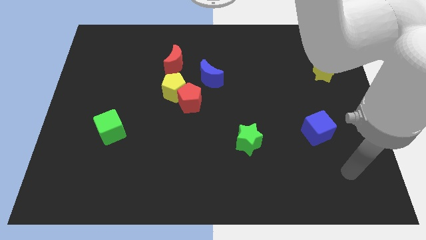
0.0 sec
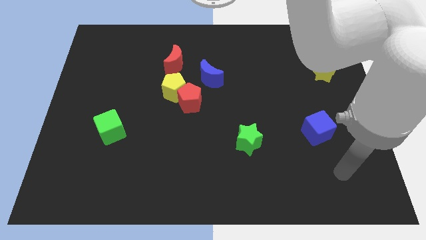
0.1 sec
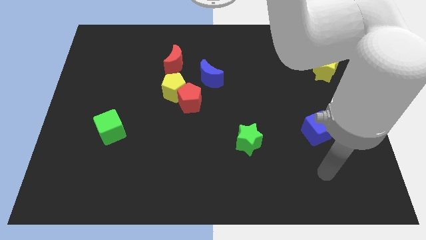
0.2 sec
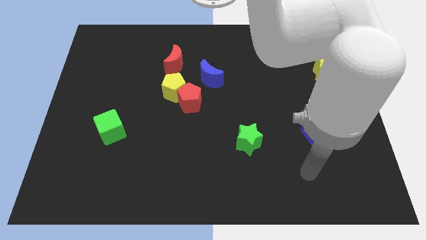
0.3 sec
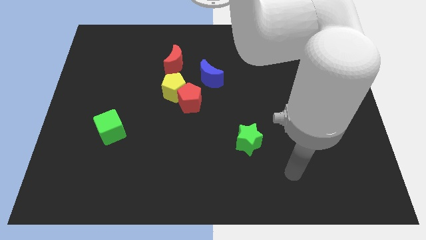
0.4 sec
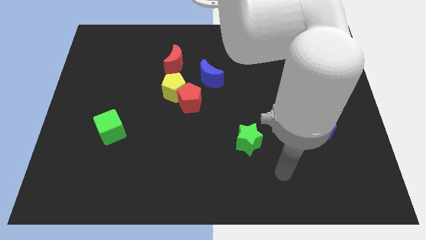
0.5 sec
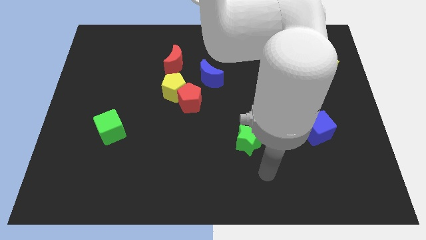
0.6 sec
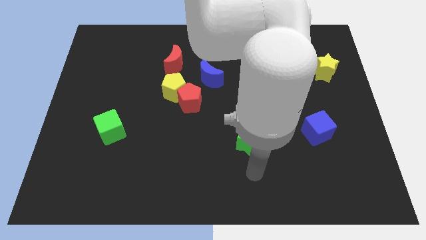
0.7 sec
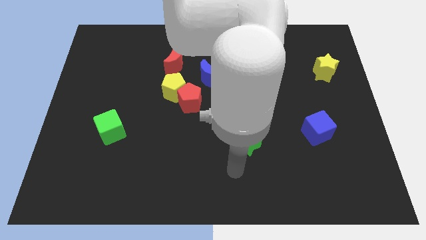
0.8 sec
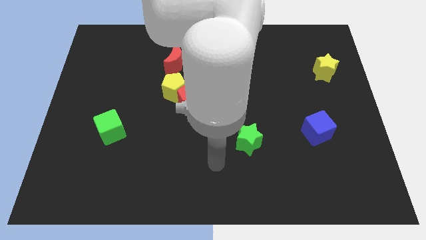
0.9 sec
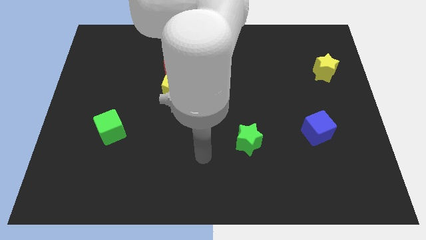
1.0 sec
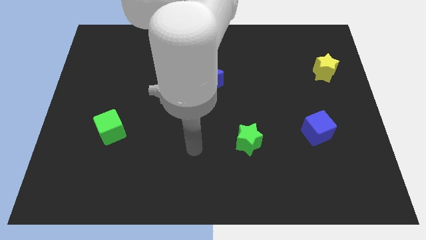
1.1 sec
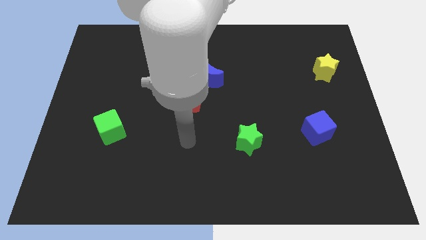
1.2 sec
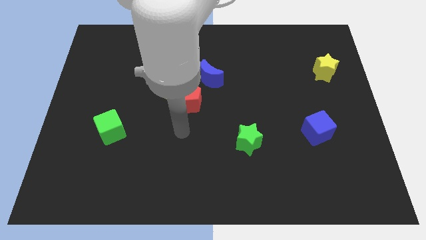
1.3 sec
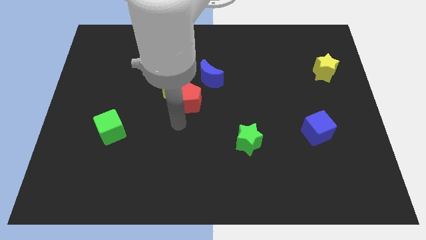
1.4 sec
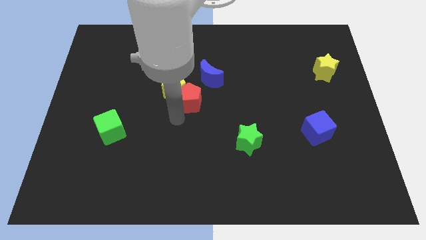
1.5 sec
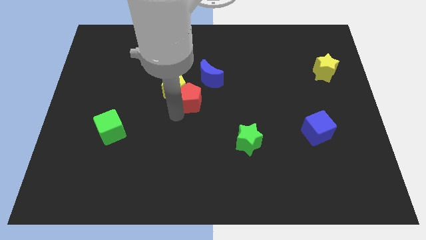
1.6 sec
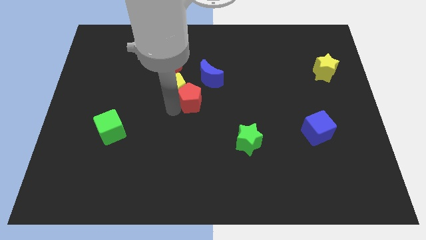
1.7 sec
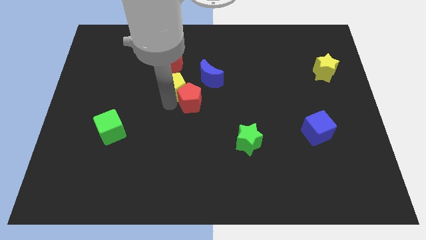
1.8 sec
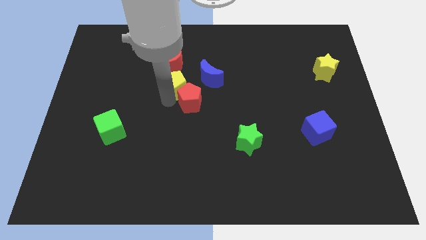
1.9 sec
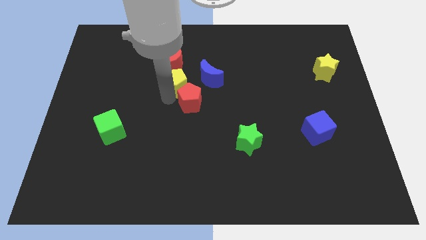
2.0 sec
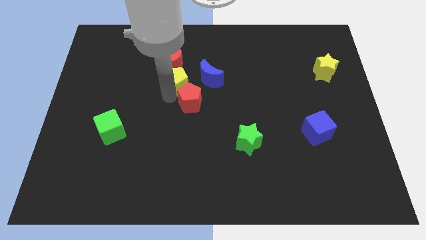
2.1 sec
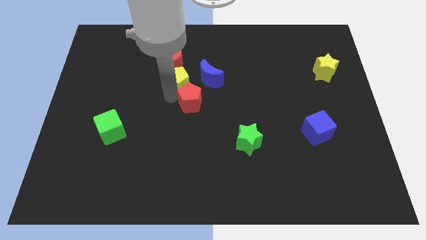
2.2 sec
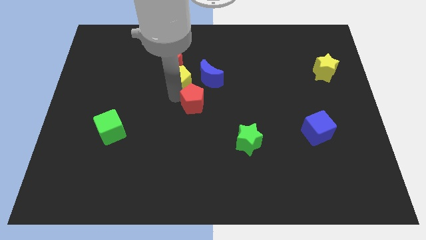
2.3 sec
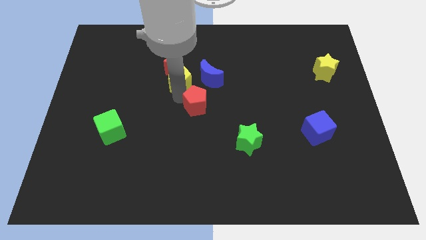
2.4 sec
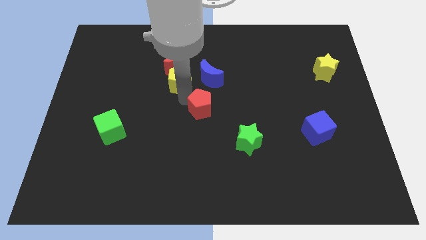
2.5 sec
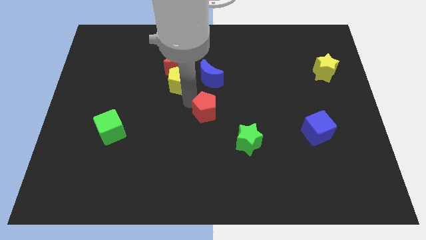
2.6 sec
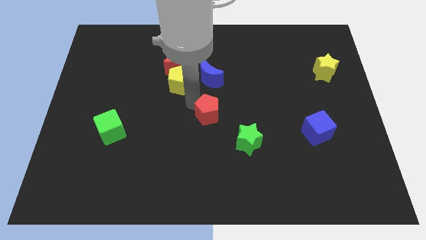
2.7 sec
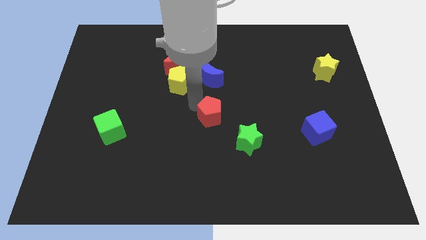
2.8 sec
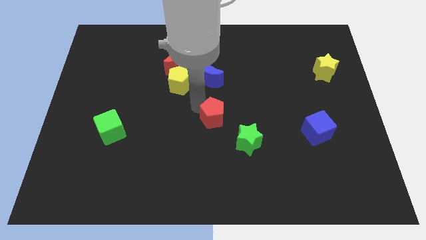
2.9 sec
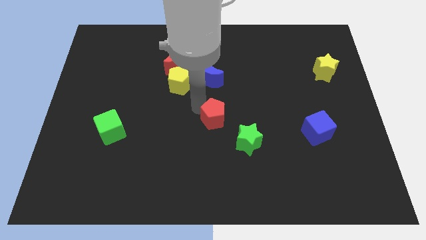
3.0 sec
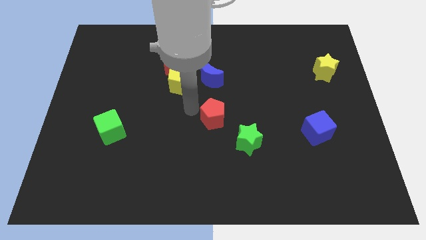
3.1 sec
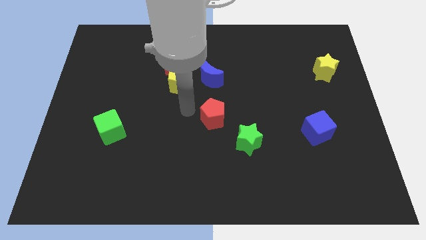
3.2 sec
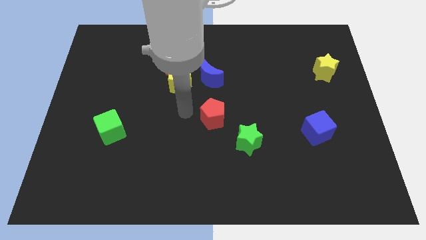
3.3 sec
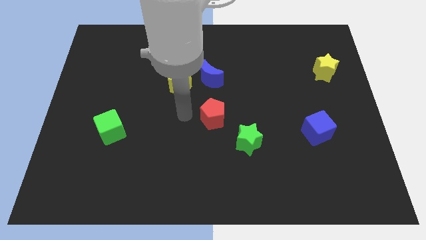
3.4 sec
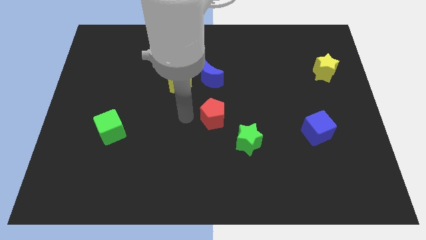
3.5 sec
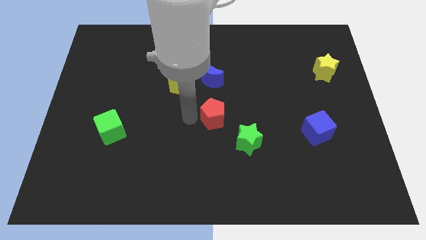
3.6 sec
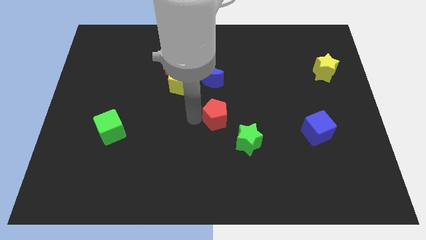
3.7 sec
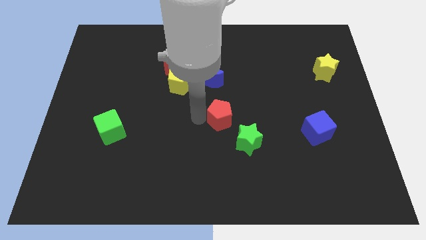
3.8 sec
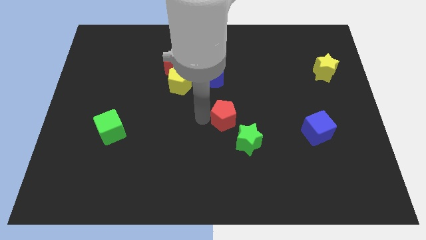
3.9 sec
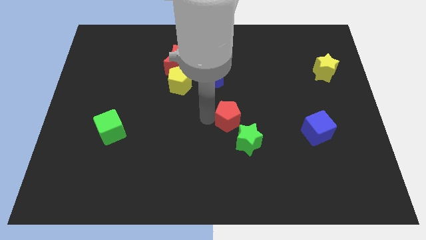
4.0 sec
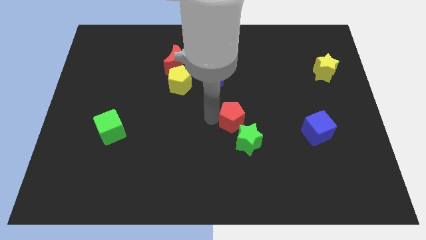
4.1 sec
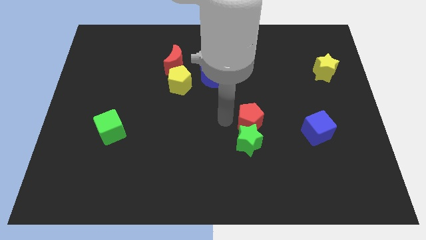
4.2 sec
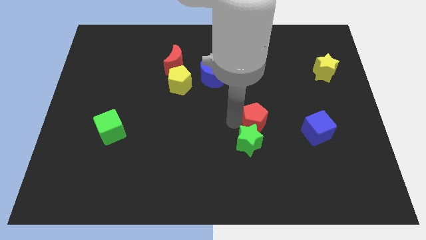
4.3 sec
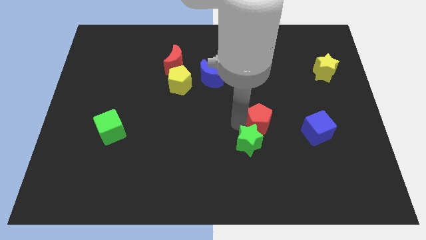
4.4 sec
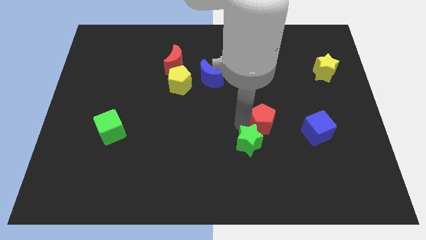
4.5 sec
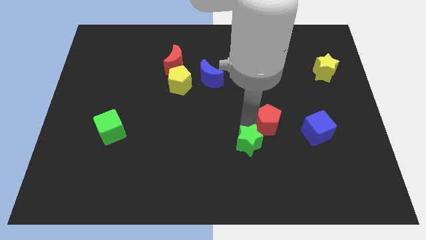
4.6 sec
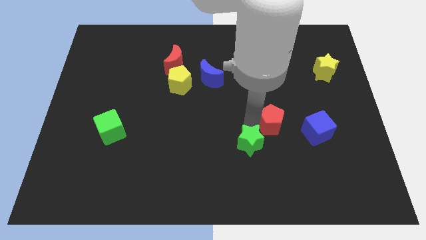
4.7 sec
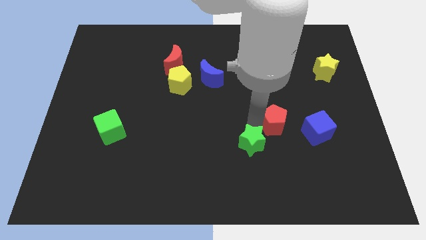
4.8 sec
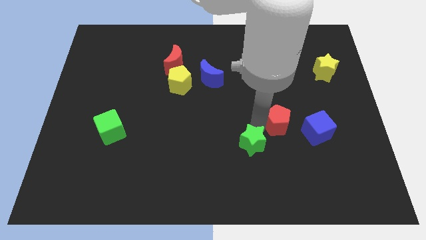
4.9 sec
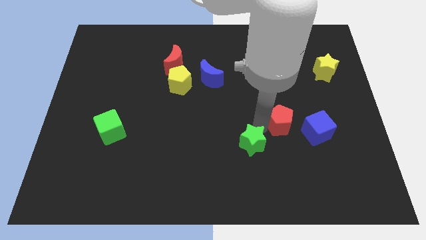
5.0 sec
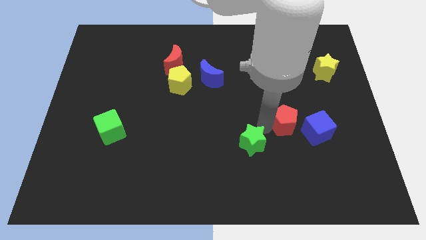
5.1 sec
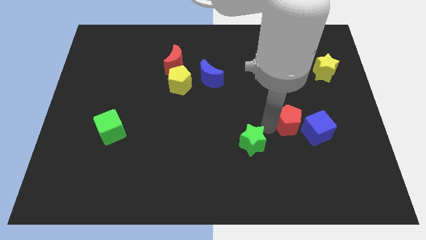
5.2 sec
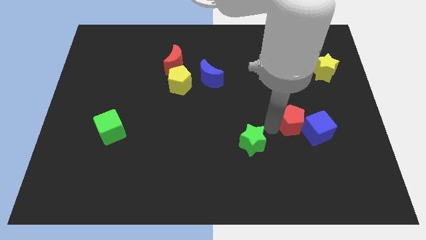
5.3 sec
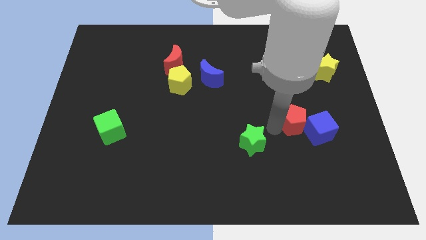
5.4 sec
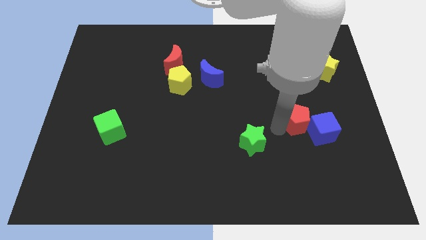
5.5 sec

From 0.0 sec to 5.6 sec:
put the red pentagon close to the blue cube

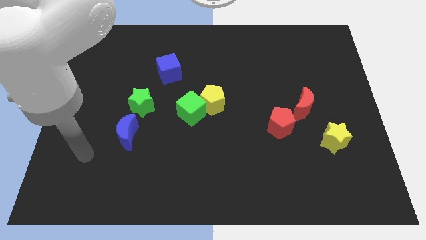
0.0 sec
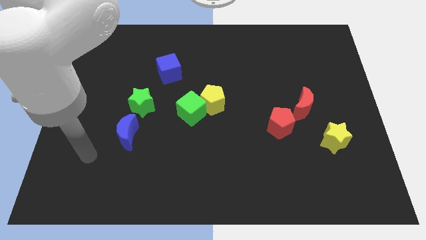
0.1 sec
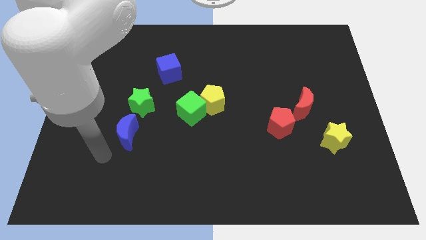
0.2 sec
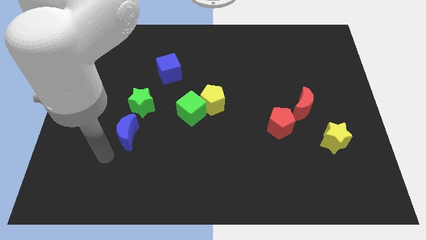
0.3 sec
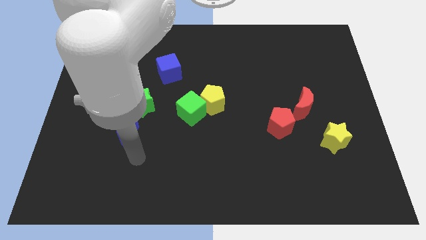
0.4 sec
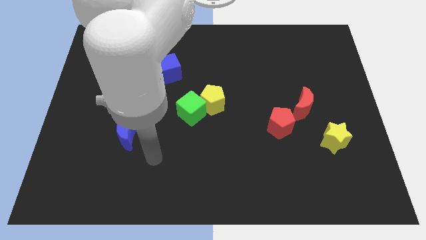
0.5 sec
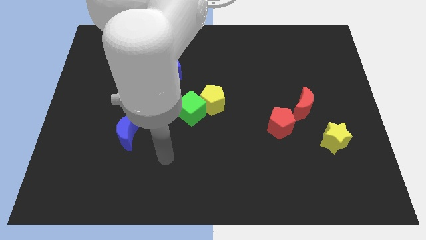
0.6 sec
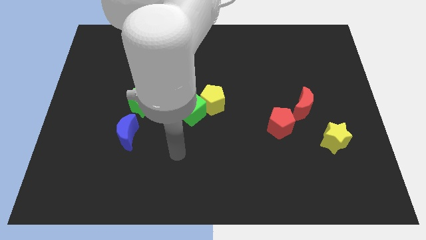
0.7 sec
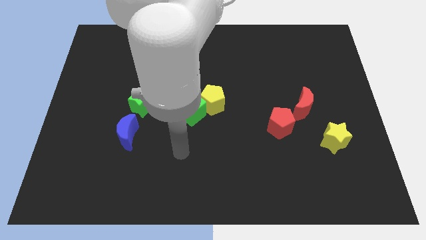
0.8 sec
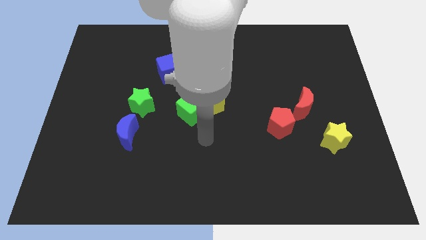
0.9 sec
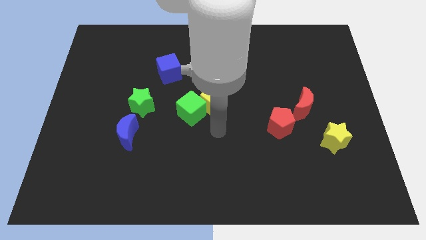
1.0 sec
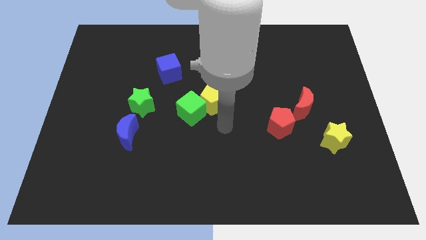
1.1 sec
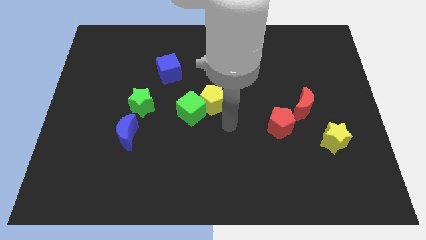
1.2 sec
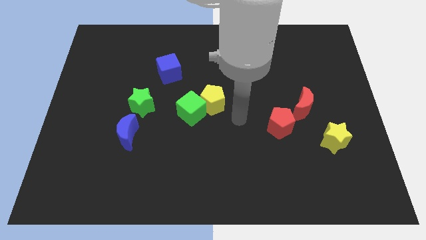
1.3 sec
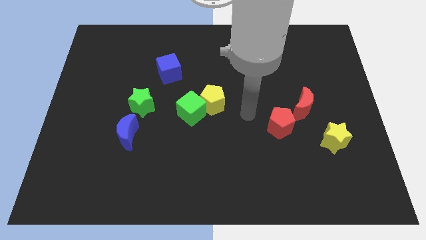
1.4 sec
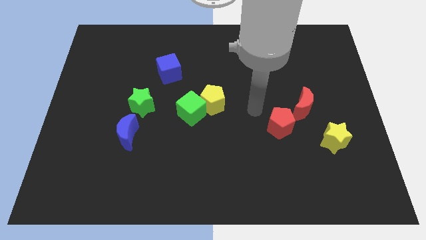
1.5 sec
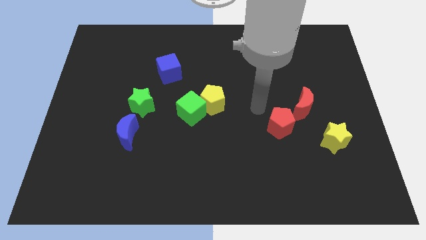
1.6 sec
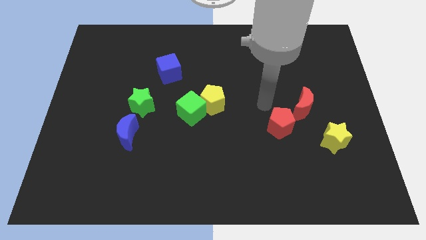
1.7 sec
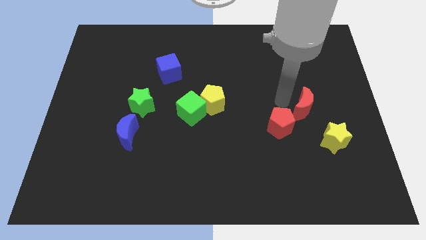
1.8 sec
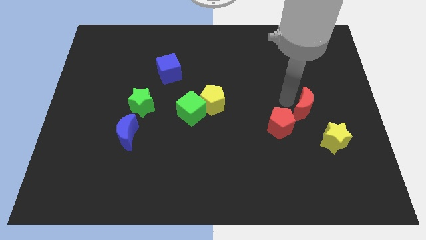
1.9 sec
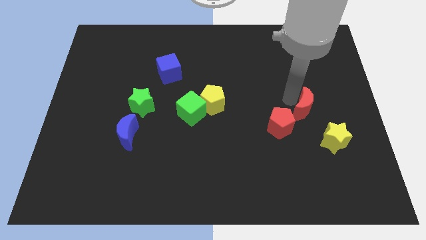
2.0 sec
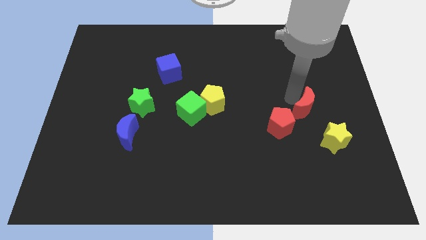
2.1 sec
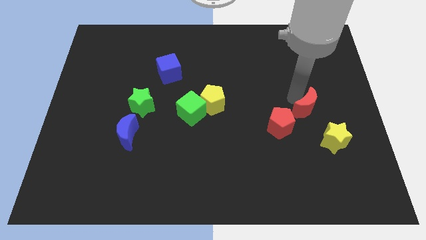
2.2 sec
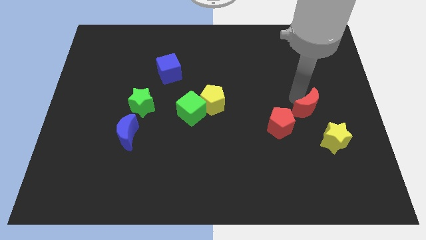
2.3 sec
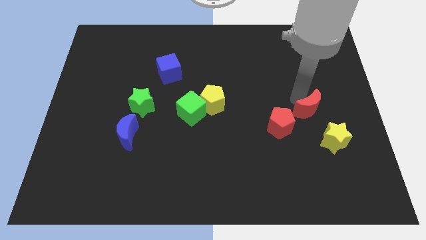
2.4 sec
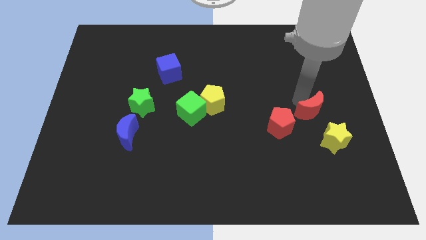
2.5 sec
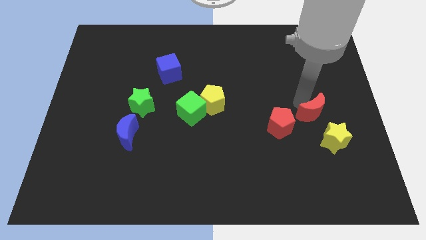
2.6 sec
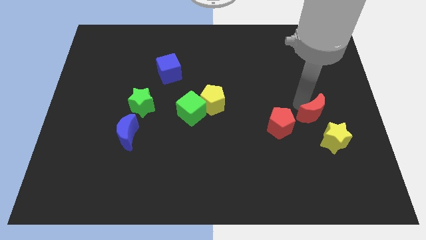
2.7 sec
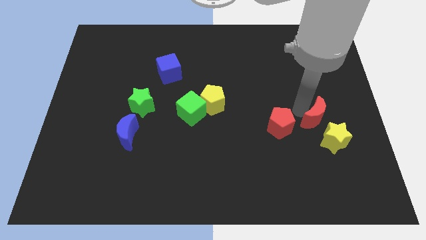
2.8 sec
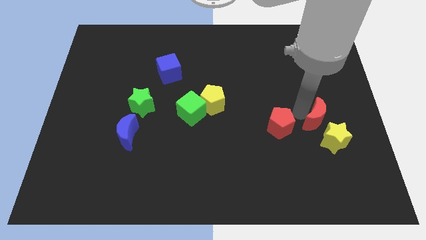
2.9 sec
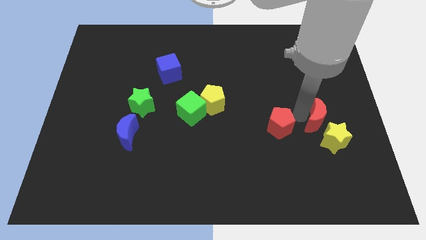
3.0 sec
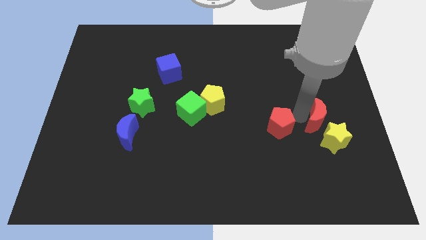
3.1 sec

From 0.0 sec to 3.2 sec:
push the red moon to the yellow star
